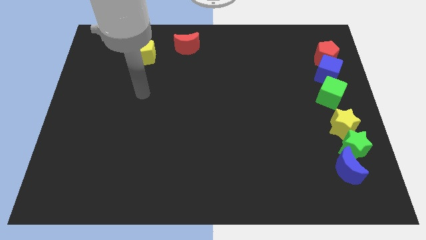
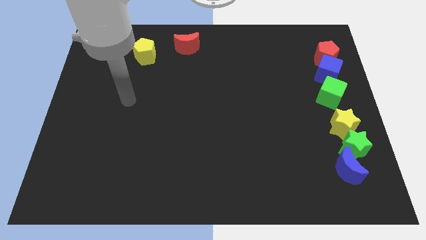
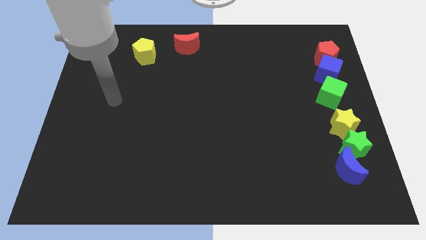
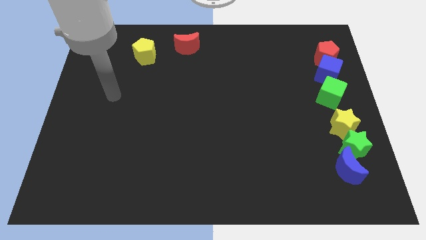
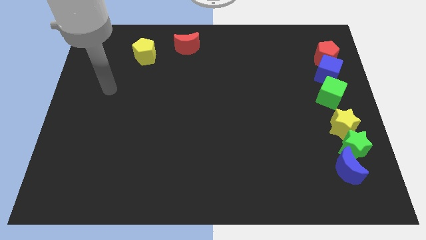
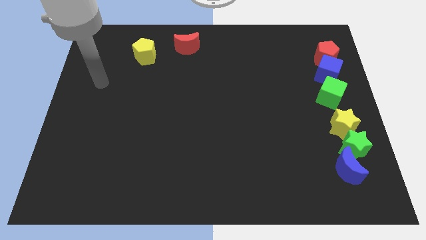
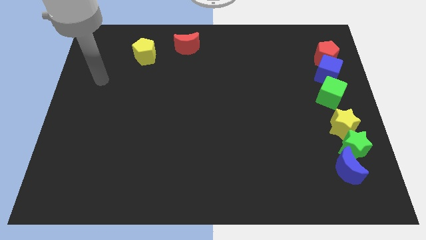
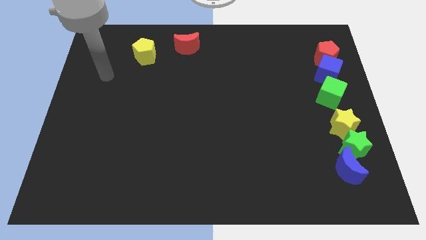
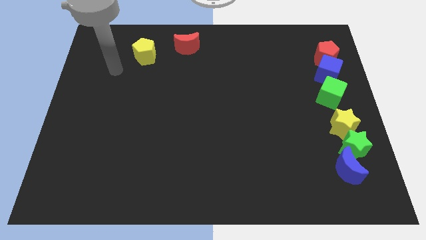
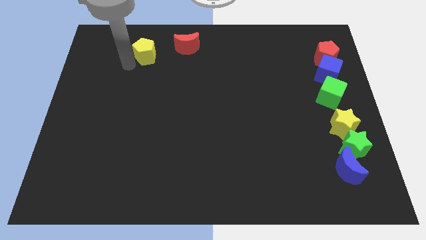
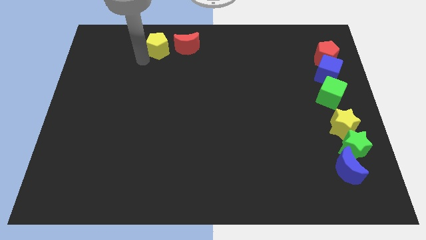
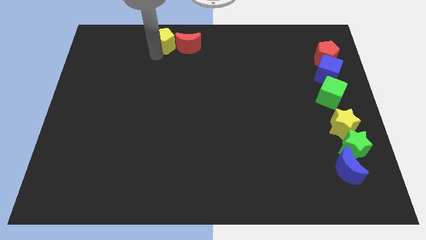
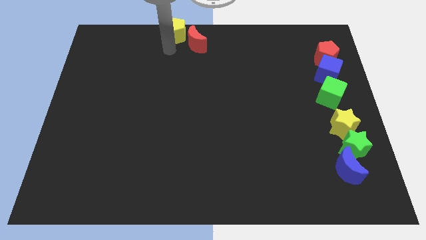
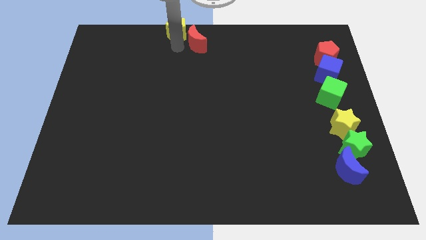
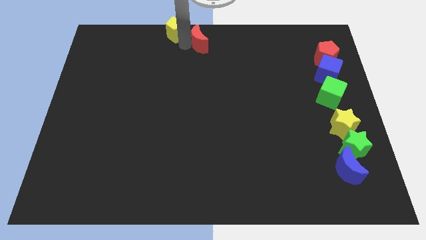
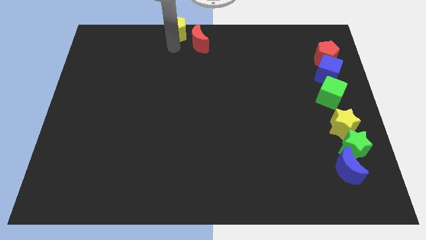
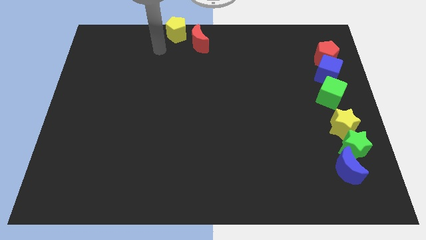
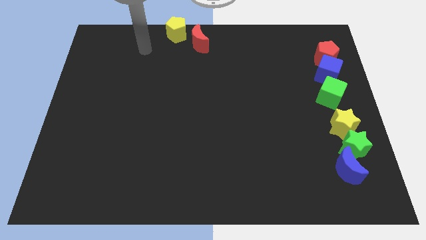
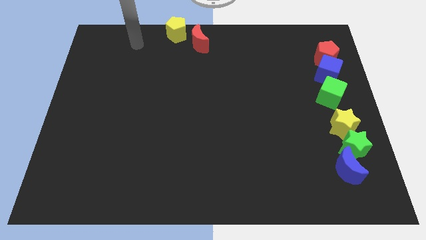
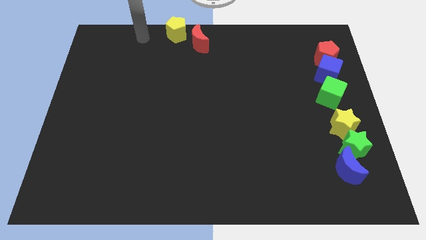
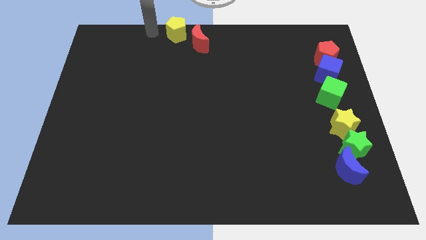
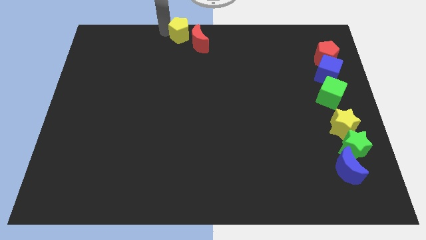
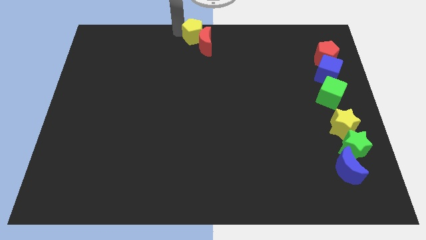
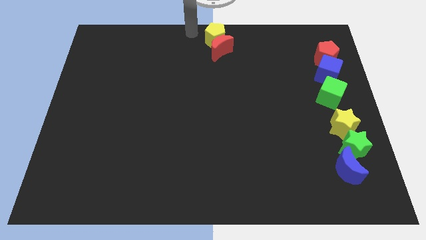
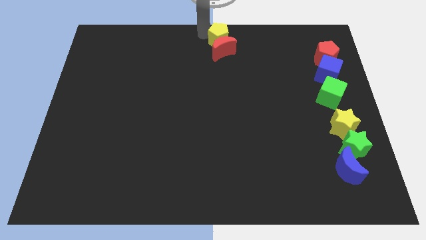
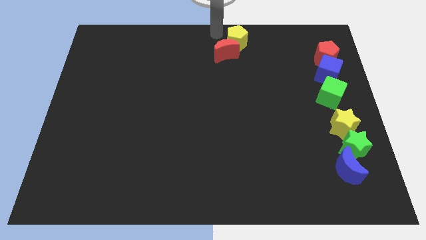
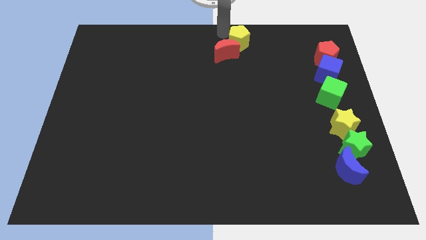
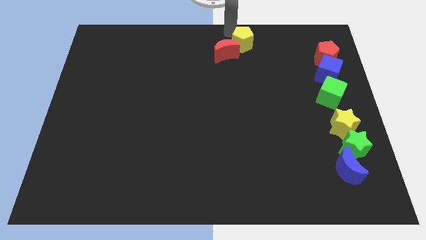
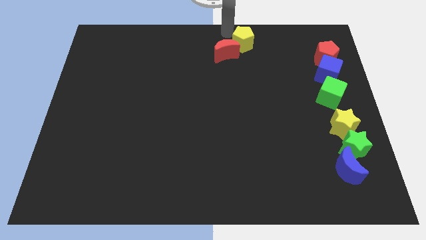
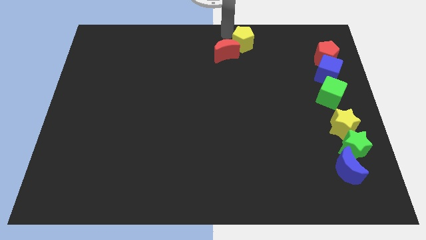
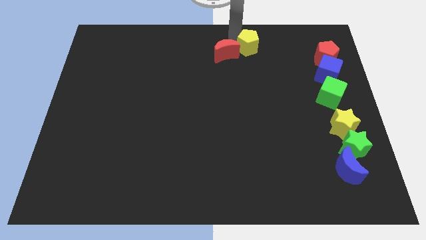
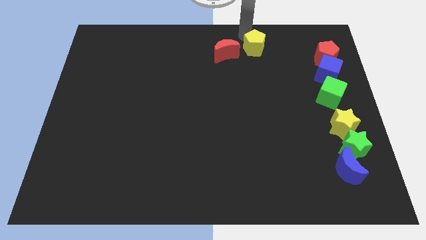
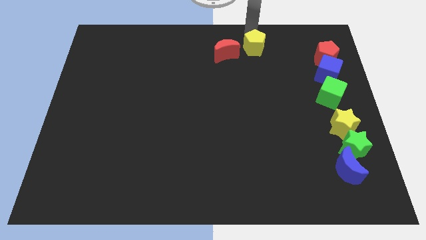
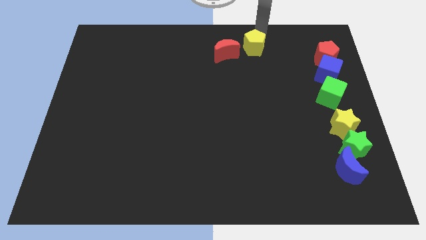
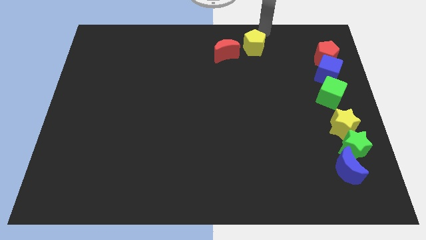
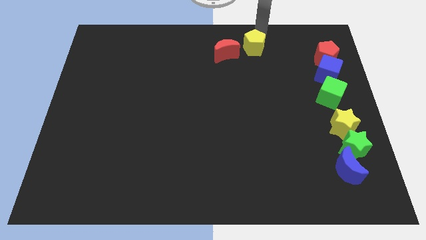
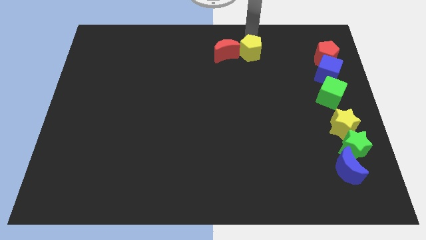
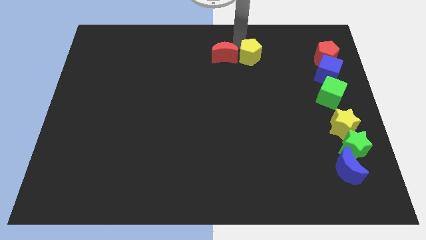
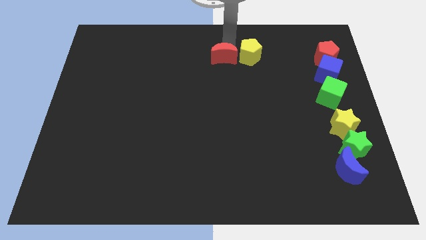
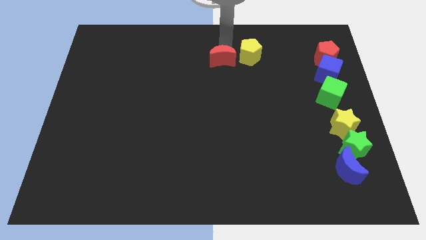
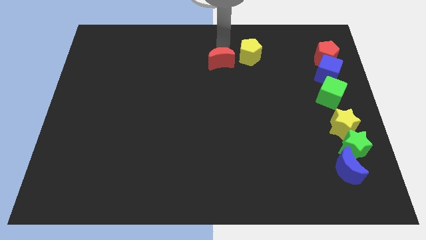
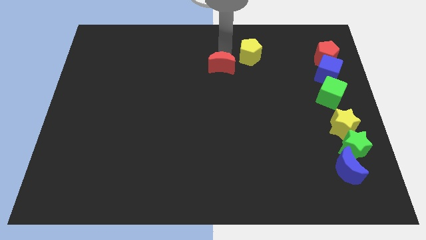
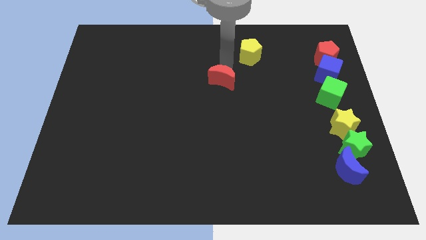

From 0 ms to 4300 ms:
move the yellow pentagon to the right side of the red moon

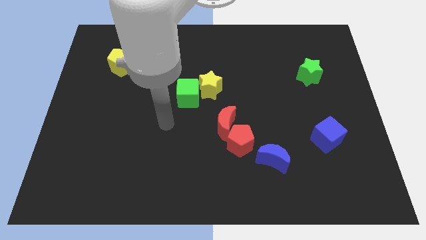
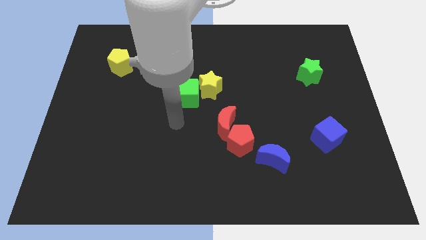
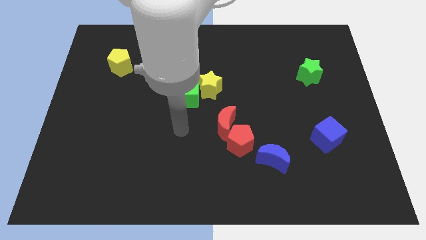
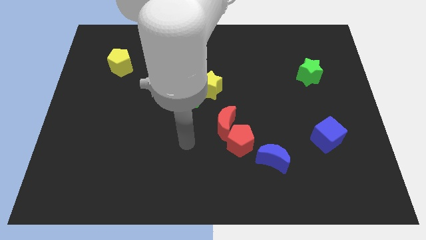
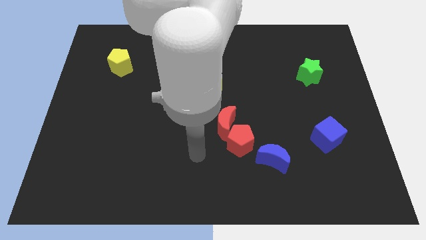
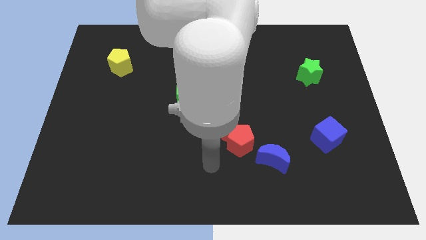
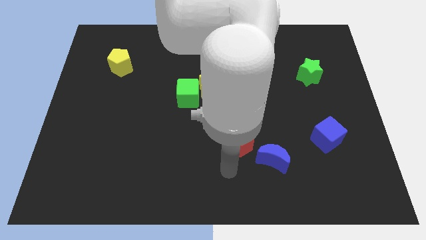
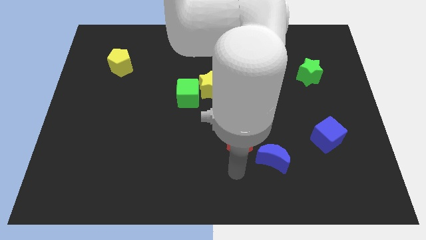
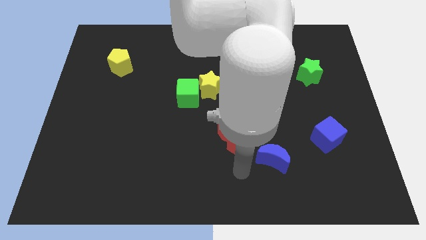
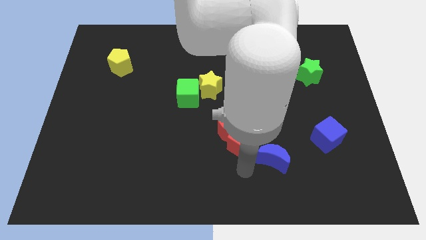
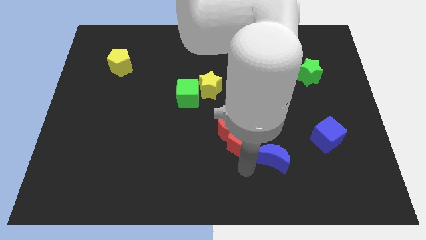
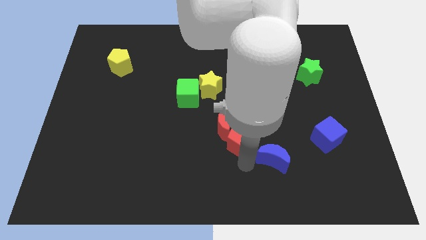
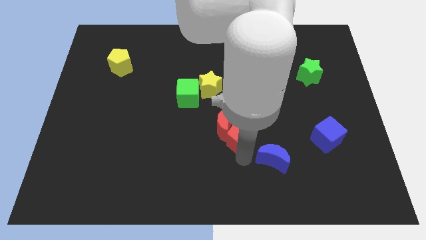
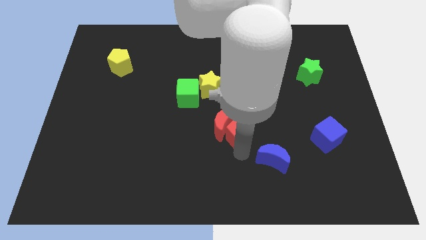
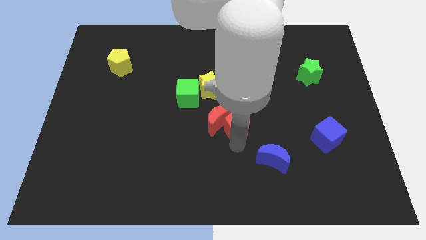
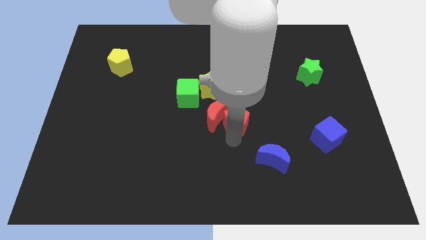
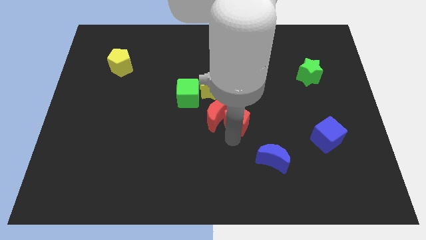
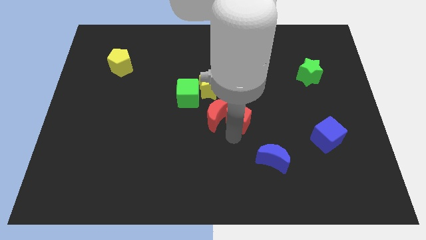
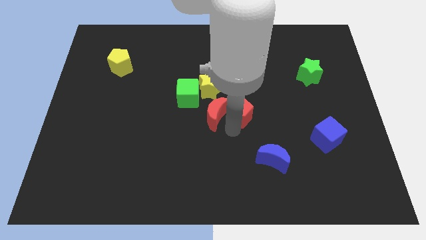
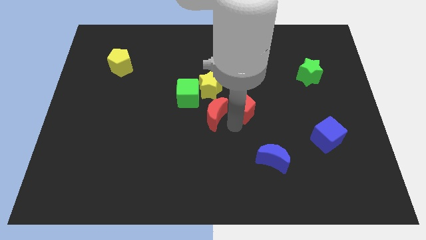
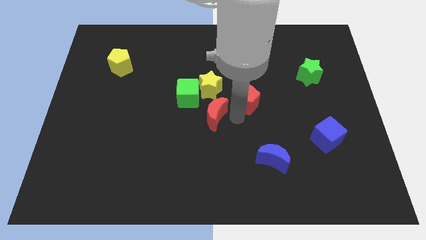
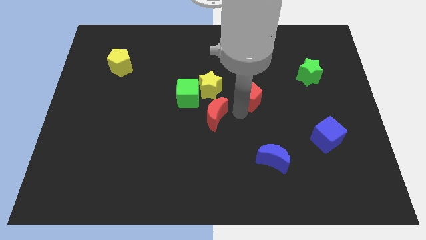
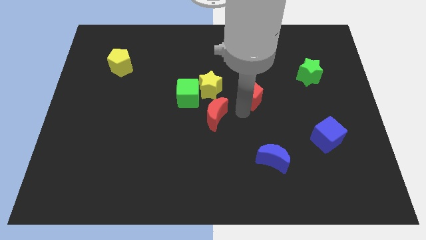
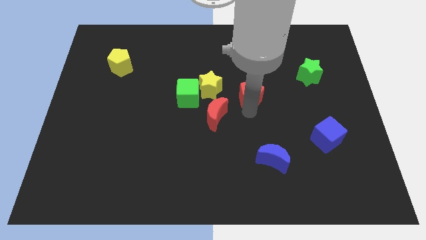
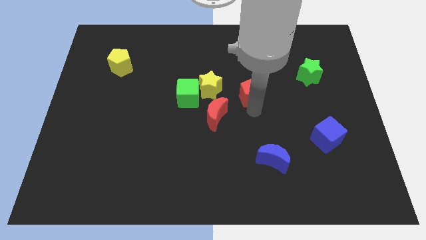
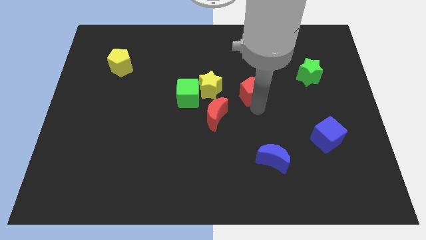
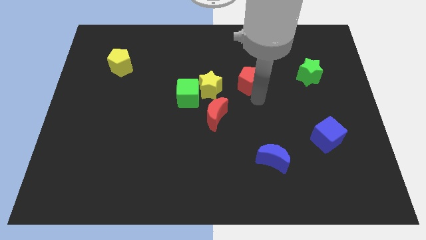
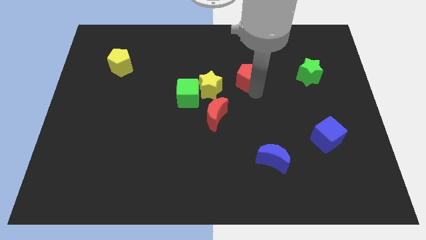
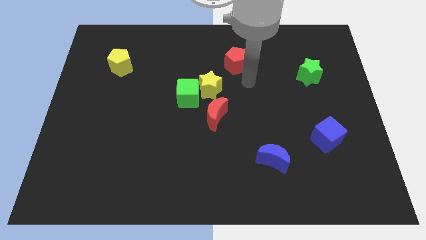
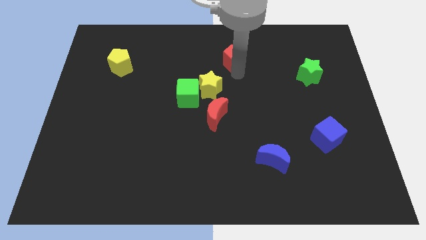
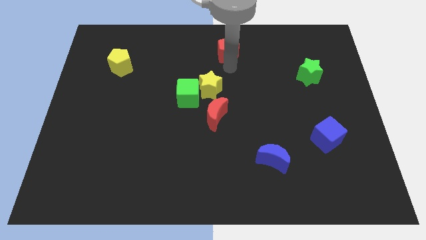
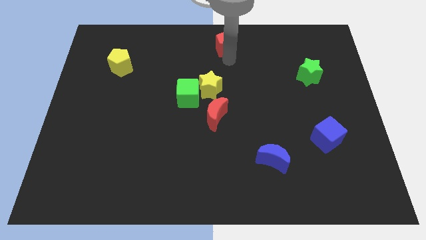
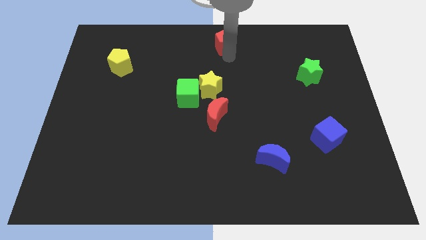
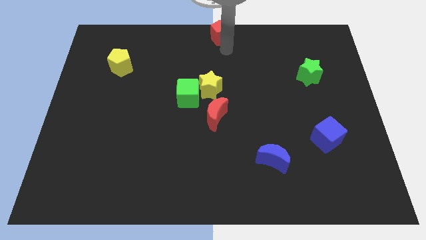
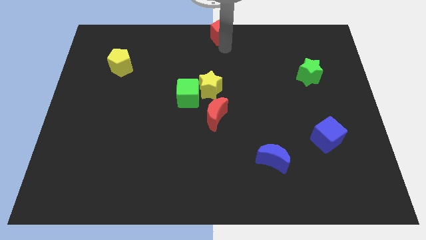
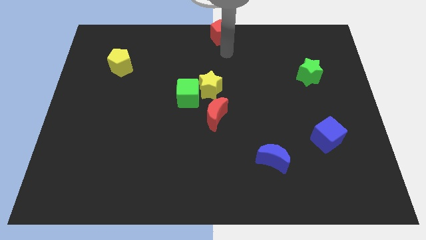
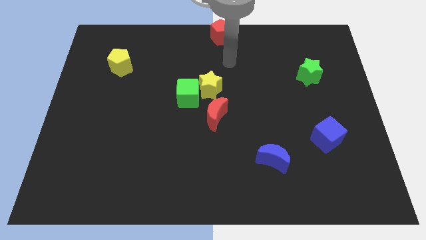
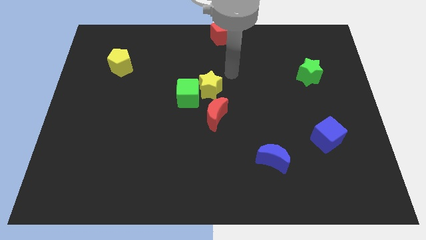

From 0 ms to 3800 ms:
move the red pentagon to the center top of the board

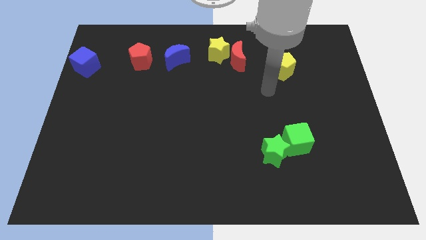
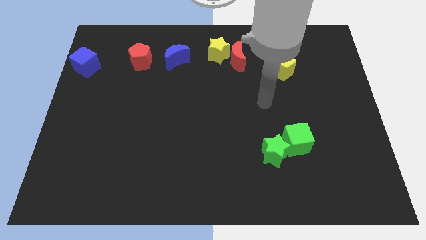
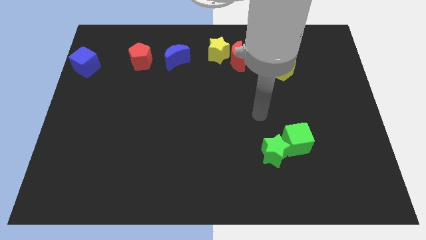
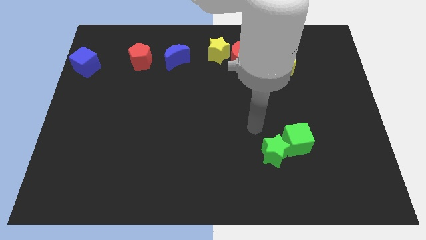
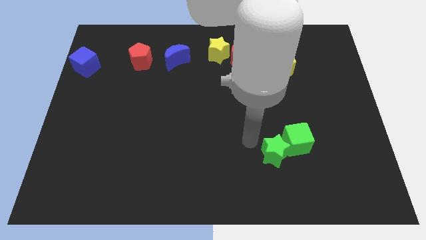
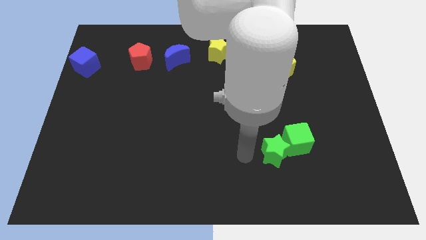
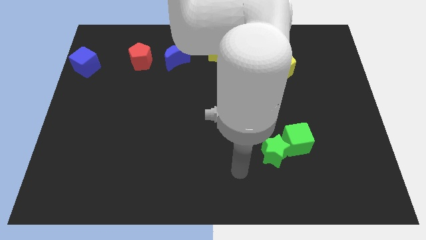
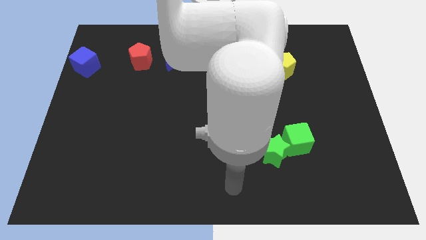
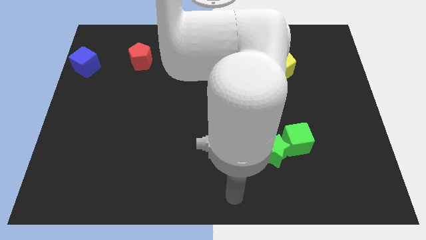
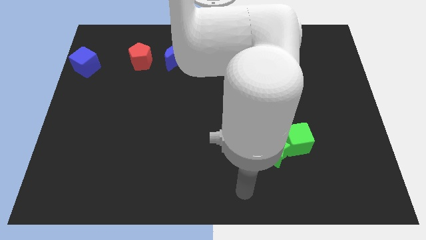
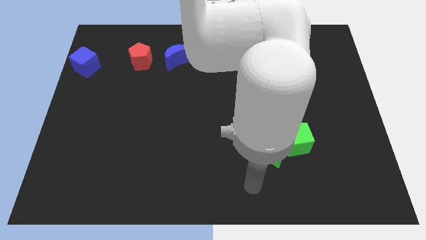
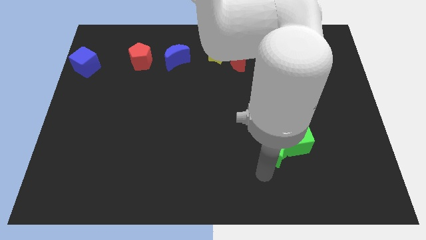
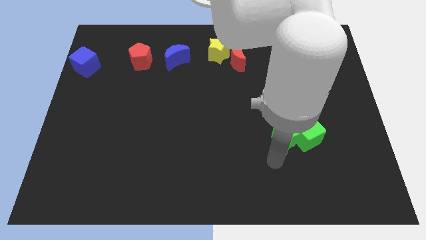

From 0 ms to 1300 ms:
move the arm to the bottom left to the green star
